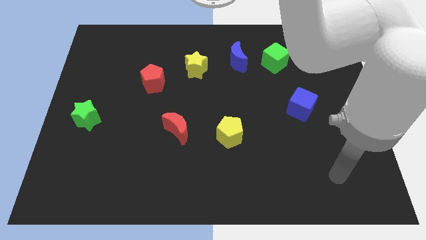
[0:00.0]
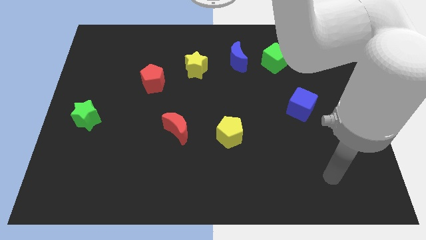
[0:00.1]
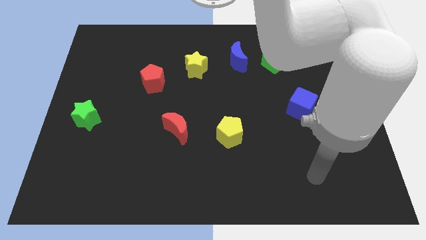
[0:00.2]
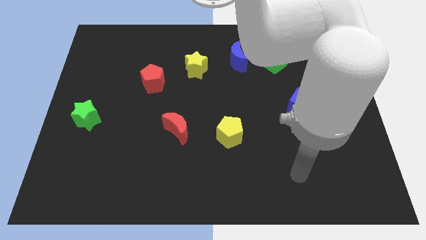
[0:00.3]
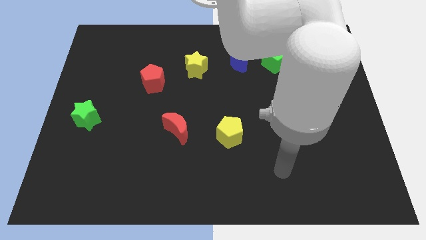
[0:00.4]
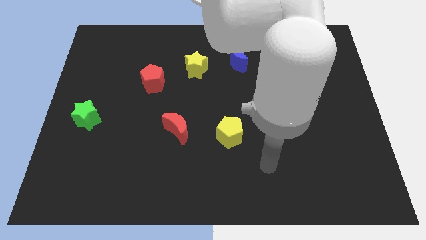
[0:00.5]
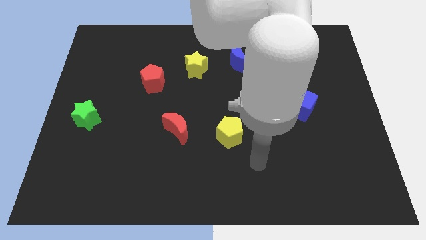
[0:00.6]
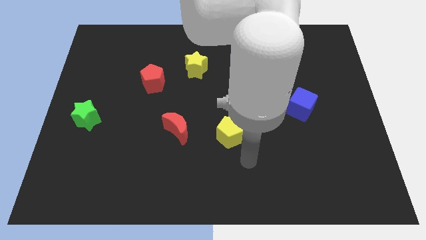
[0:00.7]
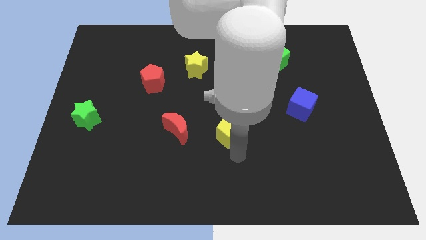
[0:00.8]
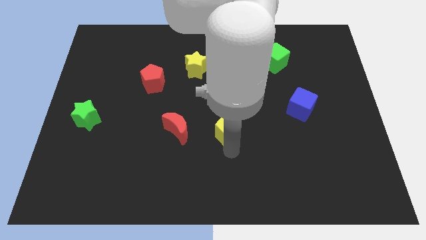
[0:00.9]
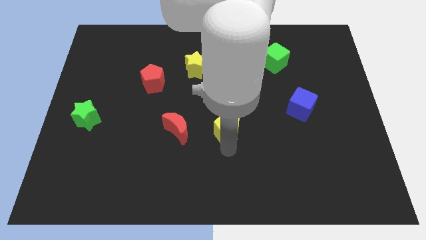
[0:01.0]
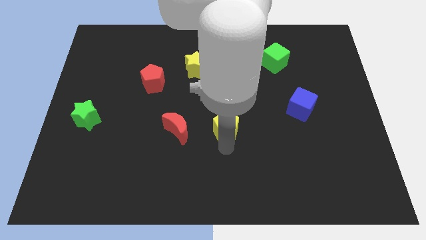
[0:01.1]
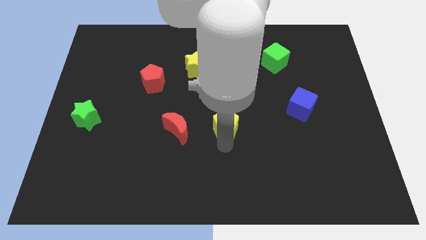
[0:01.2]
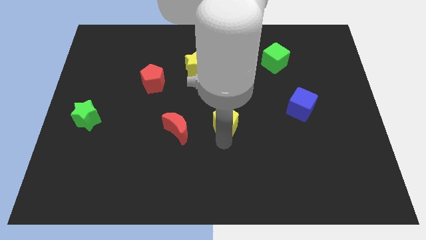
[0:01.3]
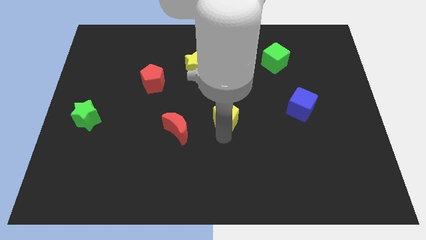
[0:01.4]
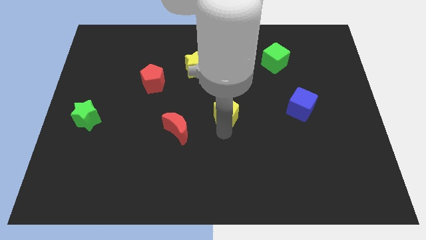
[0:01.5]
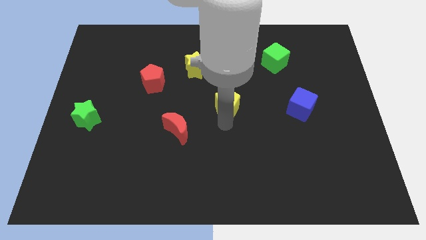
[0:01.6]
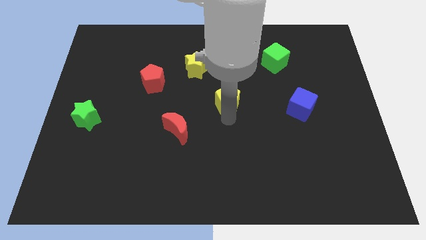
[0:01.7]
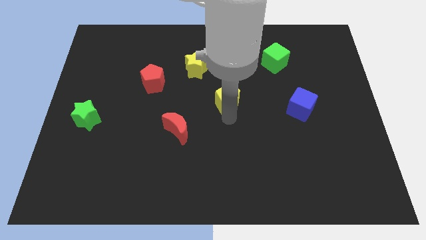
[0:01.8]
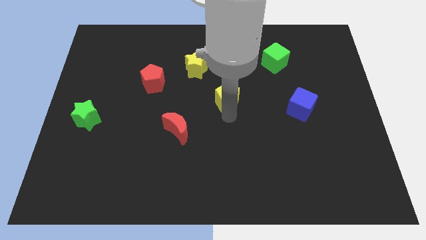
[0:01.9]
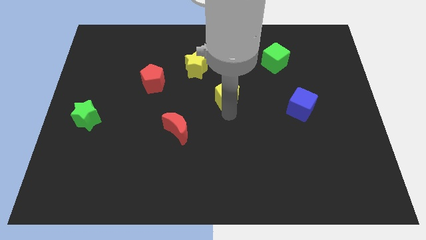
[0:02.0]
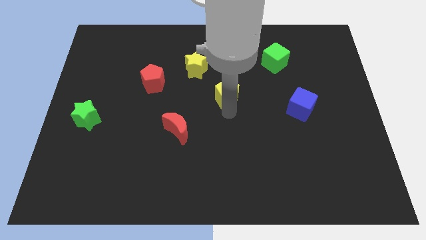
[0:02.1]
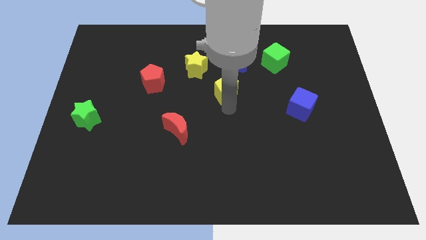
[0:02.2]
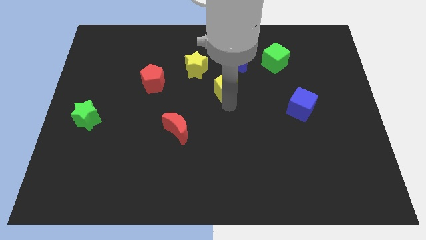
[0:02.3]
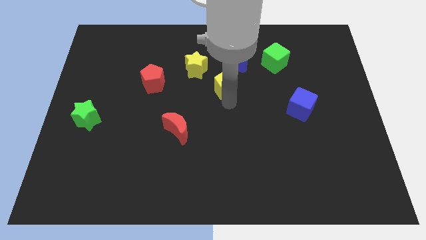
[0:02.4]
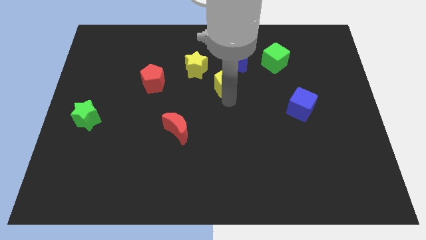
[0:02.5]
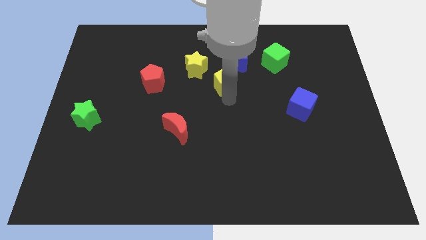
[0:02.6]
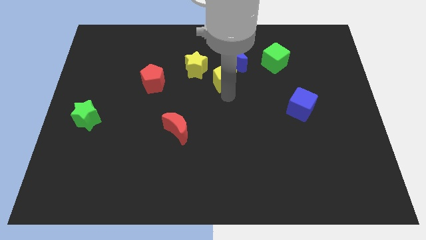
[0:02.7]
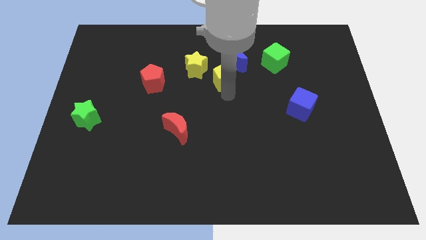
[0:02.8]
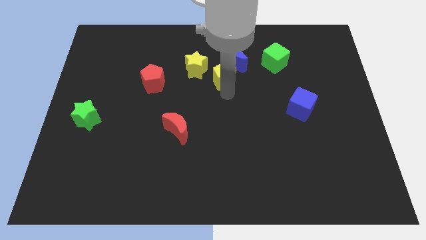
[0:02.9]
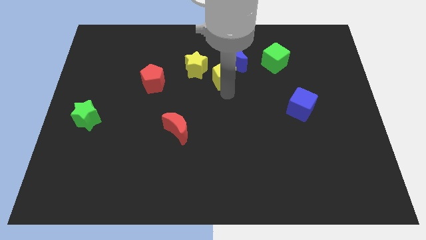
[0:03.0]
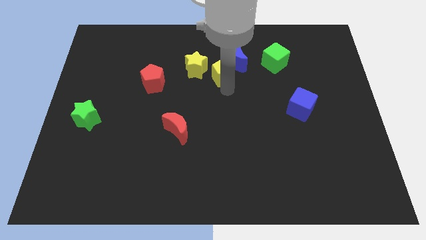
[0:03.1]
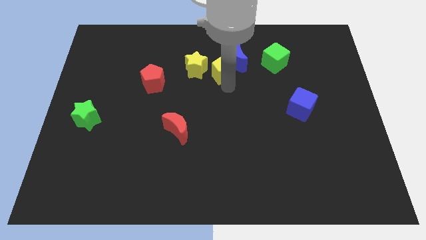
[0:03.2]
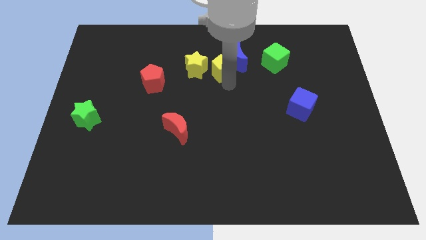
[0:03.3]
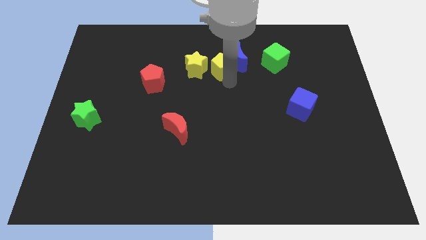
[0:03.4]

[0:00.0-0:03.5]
slide the yellow pentagon close to the blue moon

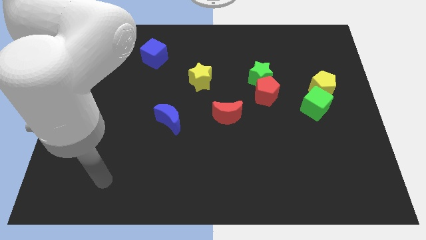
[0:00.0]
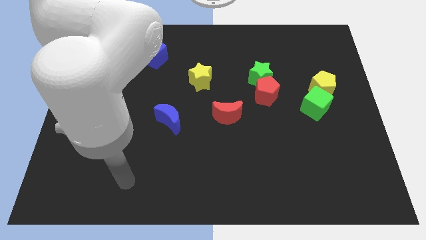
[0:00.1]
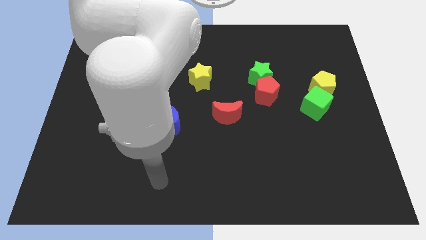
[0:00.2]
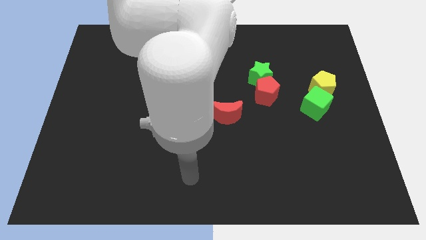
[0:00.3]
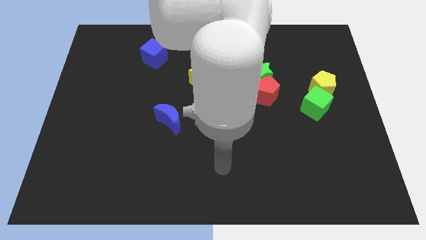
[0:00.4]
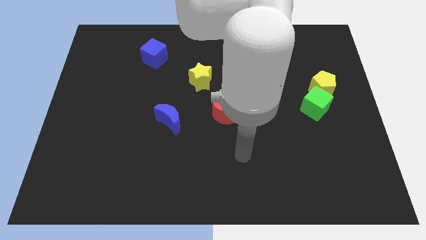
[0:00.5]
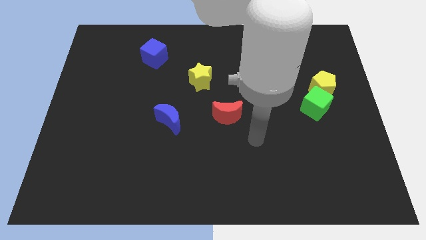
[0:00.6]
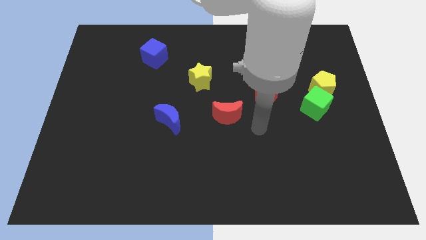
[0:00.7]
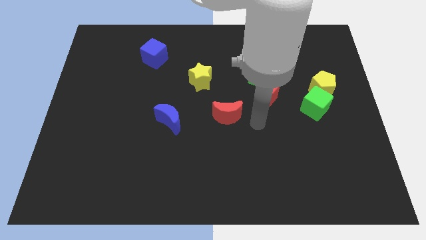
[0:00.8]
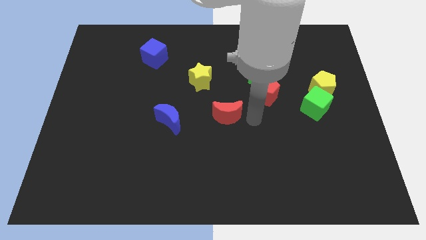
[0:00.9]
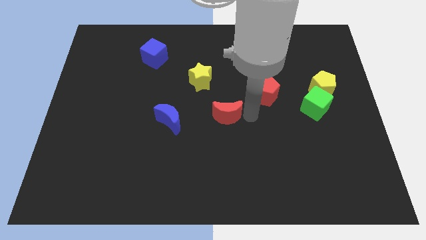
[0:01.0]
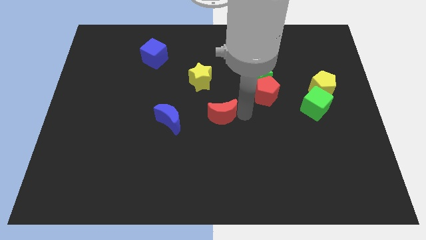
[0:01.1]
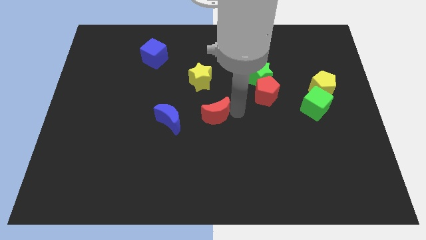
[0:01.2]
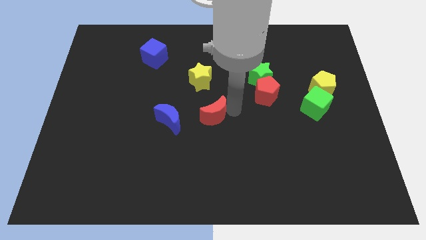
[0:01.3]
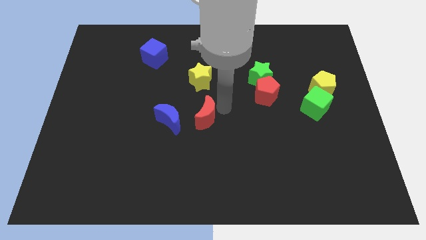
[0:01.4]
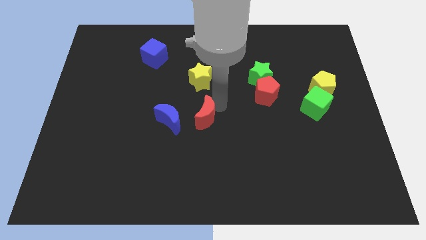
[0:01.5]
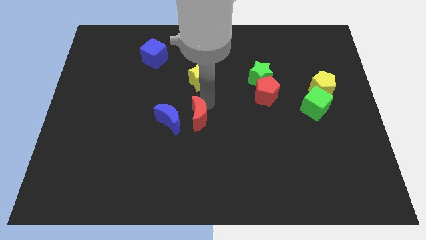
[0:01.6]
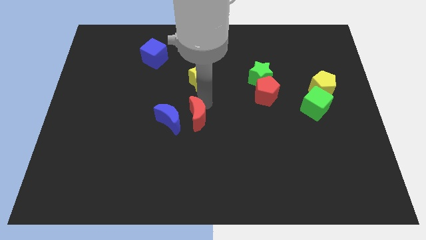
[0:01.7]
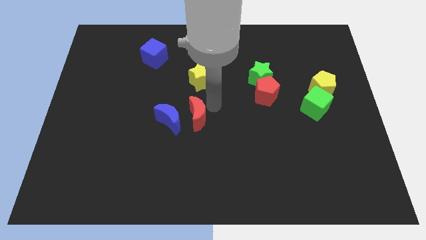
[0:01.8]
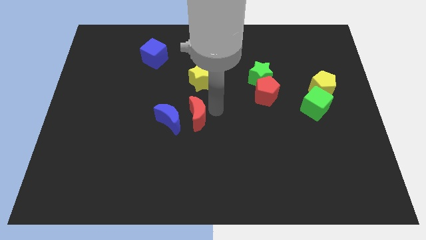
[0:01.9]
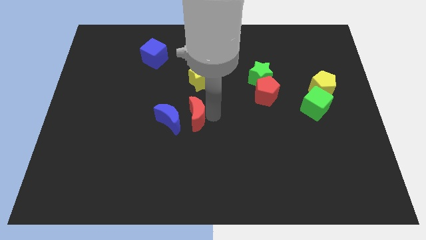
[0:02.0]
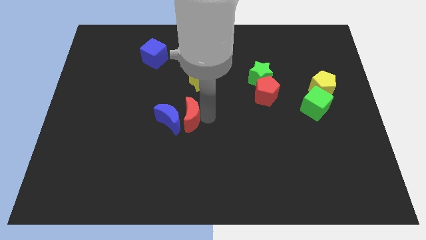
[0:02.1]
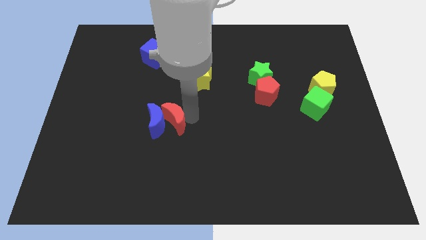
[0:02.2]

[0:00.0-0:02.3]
push the red moon towards the blue moon

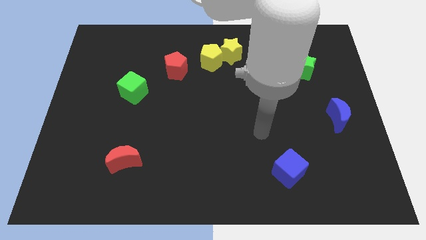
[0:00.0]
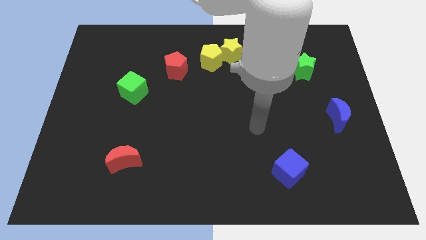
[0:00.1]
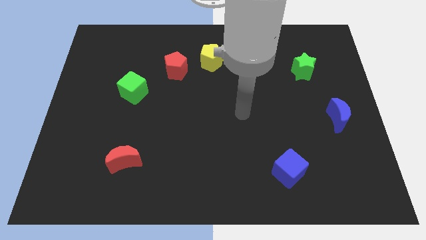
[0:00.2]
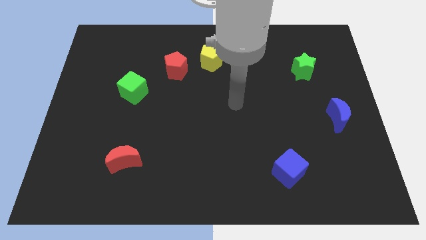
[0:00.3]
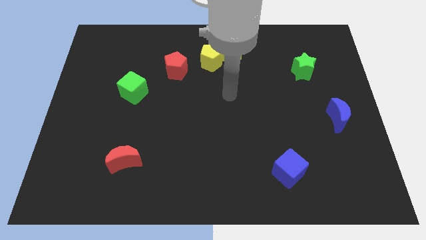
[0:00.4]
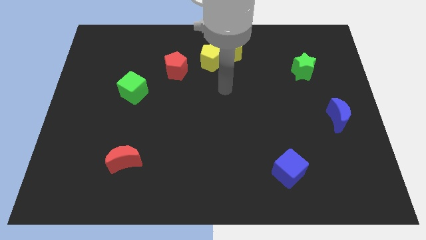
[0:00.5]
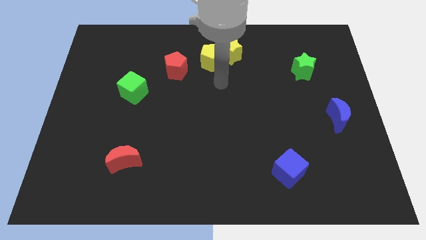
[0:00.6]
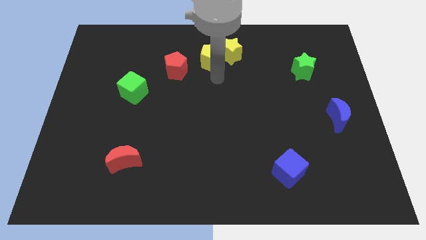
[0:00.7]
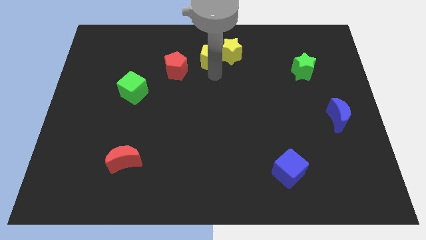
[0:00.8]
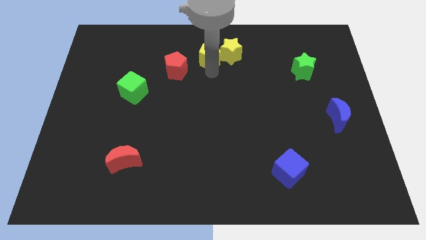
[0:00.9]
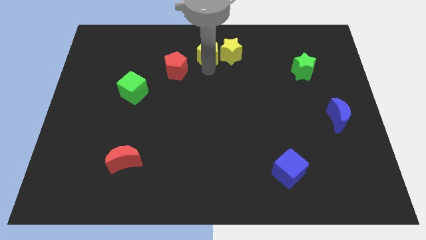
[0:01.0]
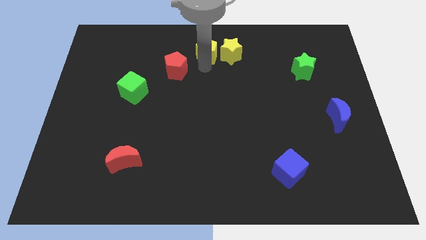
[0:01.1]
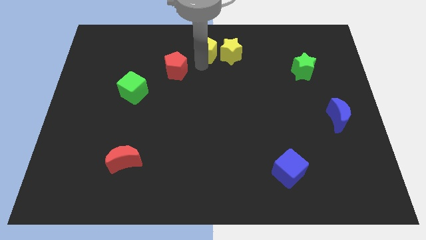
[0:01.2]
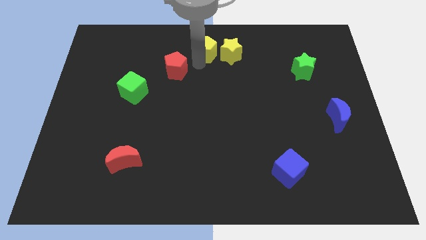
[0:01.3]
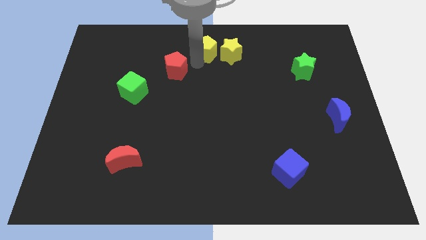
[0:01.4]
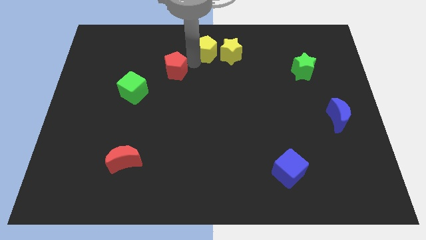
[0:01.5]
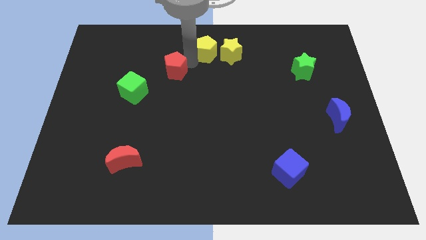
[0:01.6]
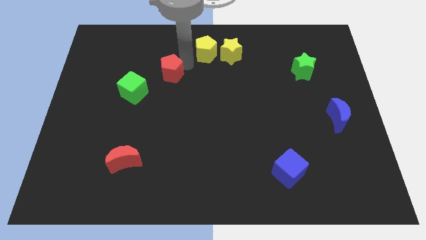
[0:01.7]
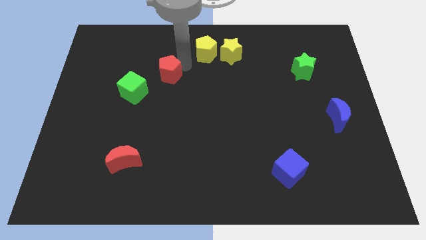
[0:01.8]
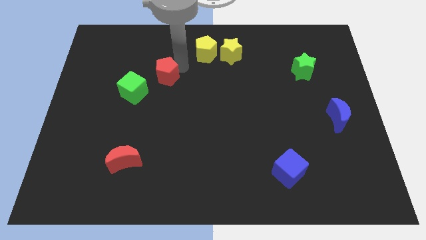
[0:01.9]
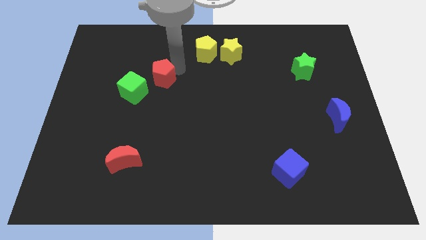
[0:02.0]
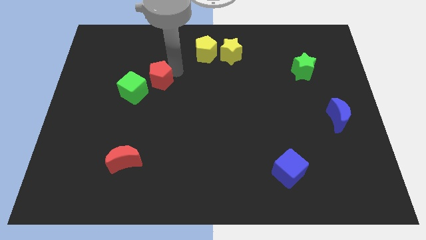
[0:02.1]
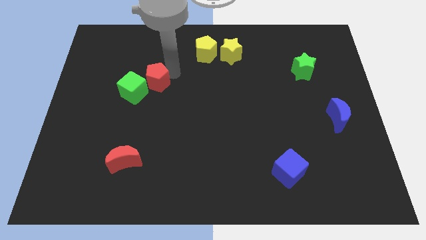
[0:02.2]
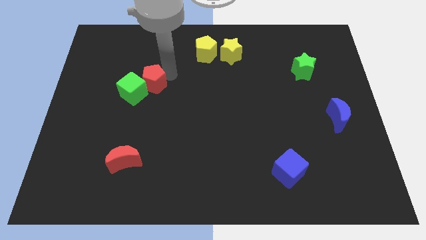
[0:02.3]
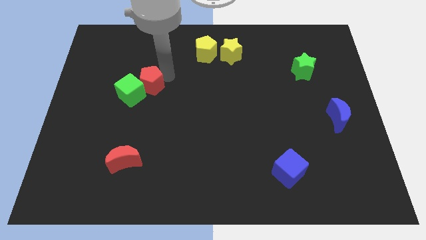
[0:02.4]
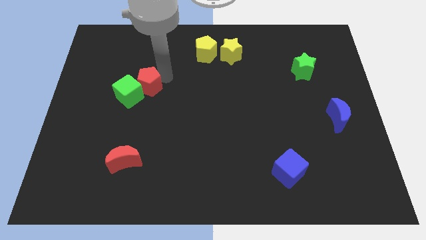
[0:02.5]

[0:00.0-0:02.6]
move the red pentagon to the green cube

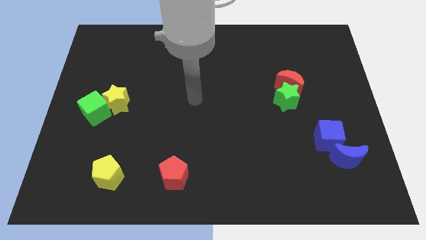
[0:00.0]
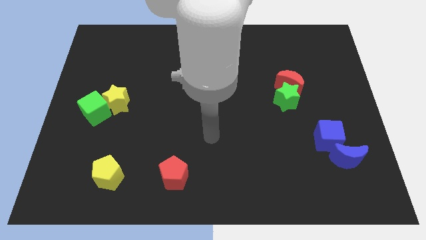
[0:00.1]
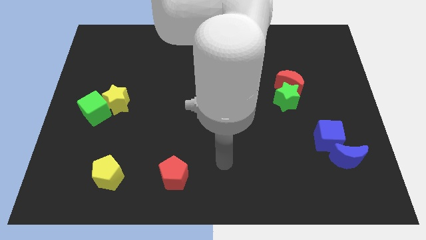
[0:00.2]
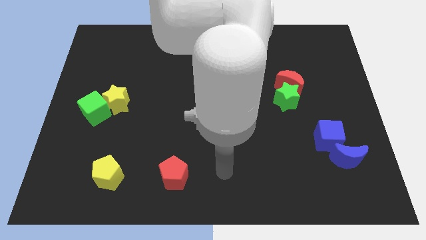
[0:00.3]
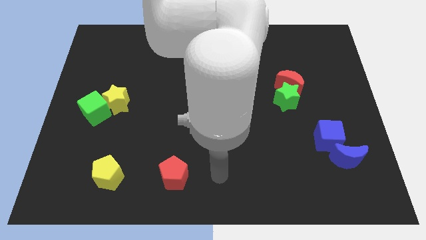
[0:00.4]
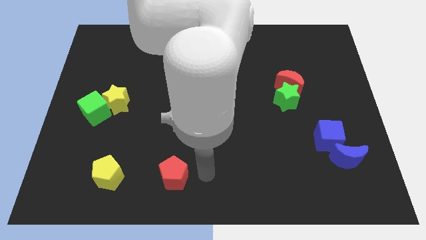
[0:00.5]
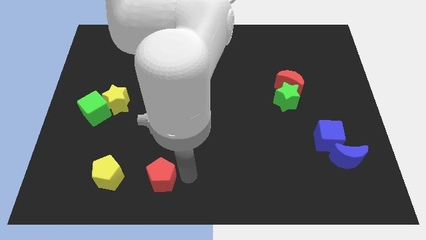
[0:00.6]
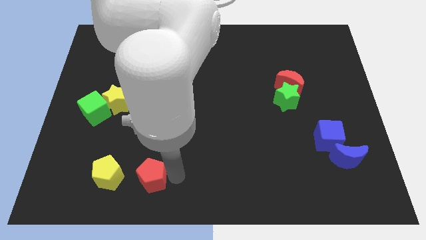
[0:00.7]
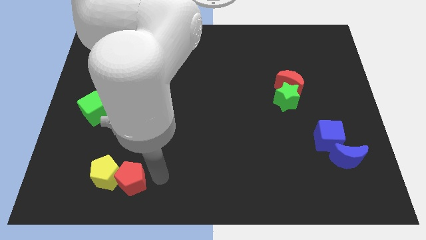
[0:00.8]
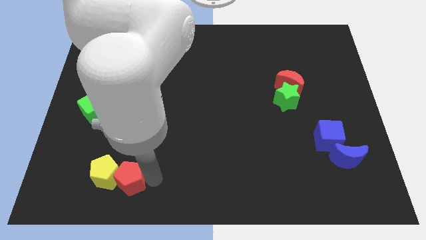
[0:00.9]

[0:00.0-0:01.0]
slide the red pentagon towards the yellow pentagon
